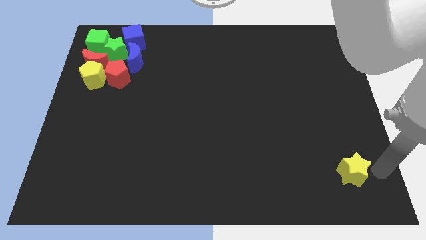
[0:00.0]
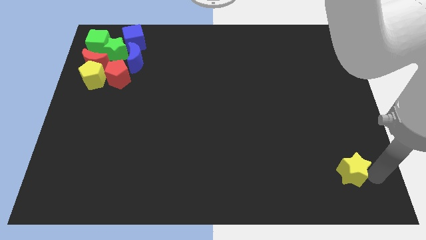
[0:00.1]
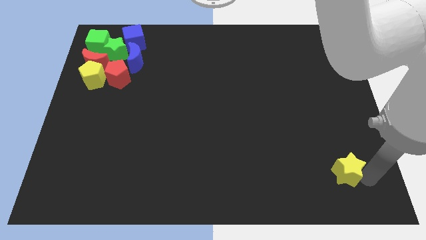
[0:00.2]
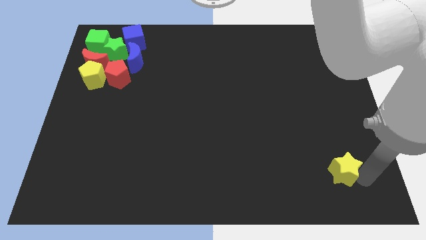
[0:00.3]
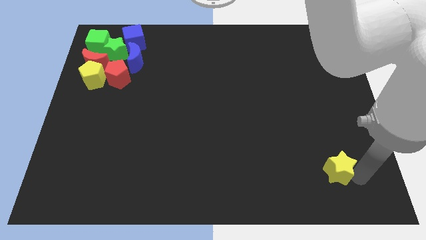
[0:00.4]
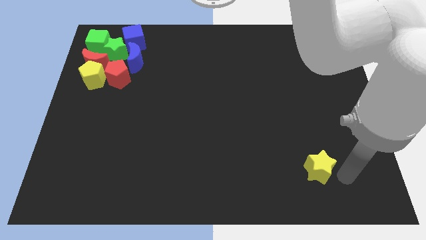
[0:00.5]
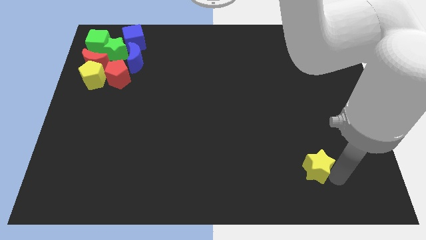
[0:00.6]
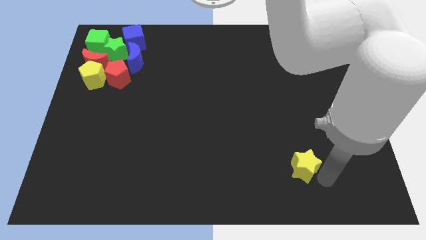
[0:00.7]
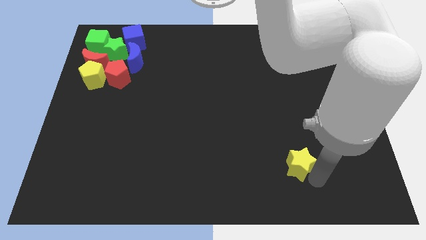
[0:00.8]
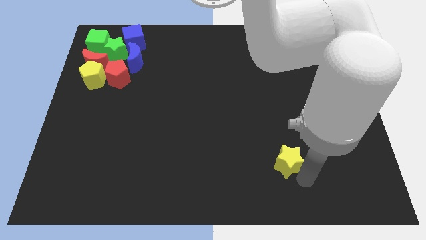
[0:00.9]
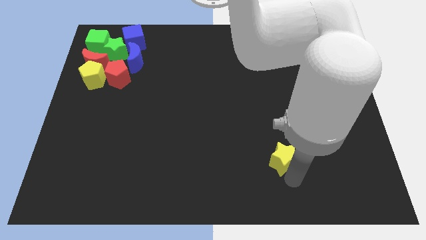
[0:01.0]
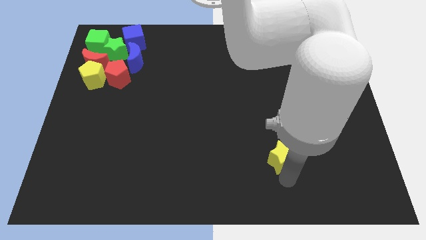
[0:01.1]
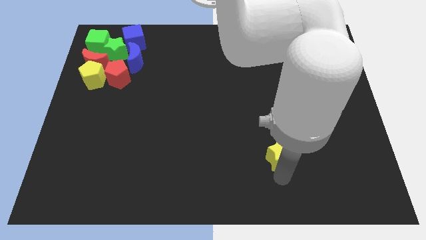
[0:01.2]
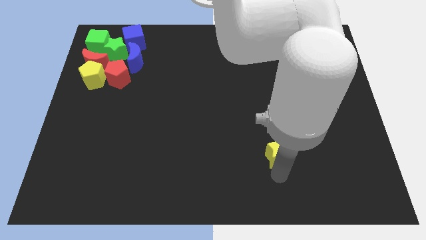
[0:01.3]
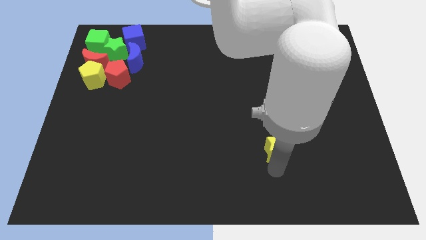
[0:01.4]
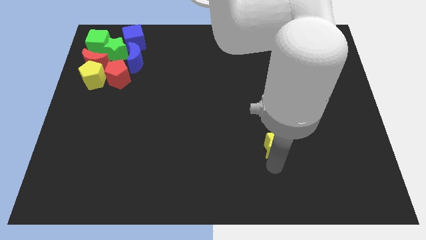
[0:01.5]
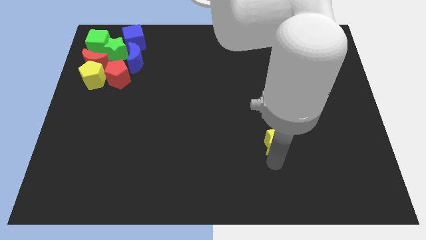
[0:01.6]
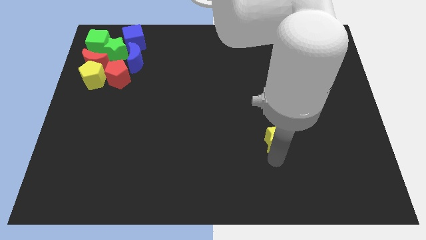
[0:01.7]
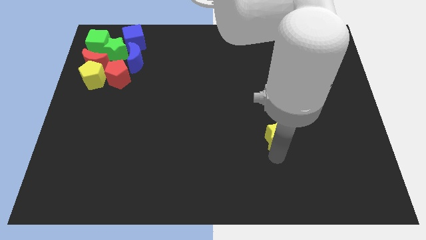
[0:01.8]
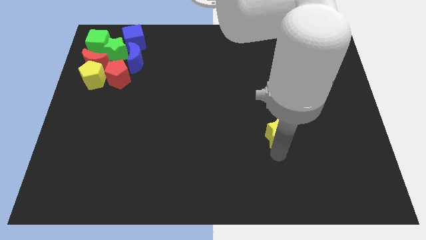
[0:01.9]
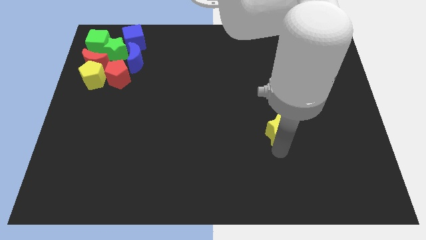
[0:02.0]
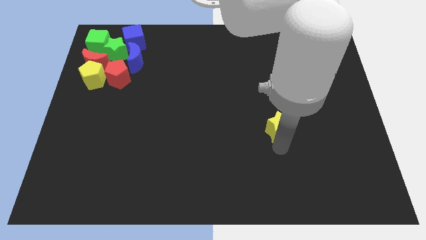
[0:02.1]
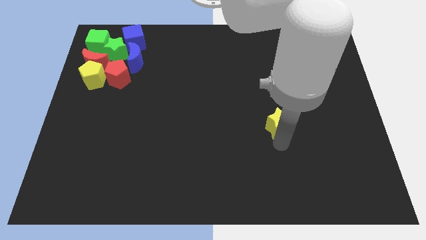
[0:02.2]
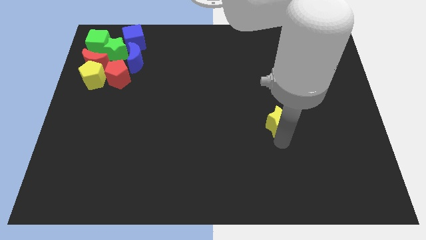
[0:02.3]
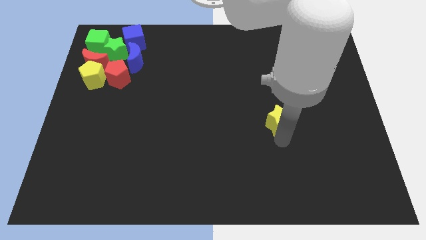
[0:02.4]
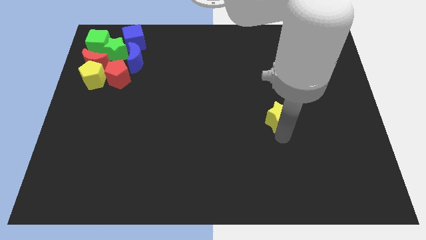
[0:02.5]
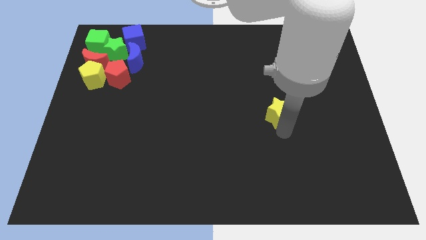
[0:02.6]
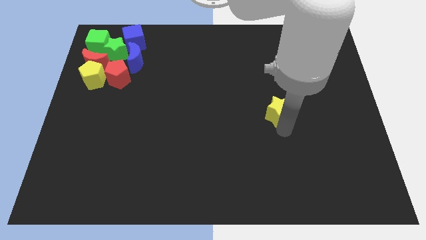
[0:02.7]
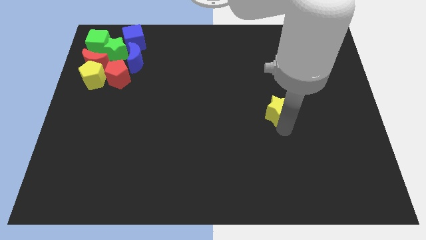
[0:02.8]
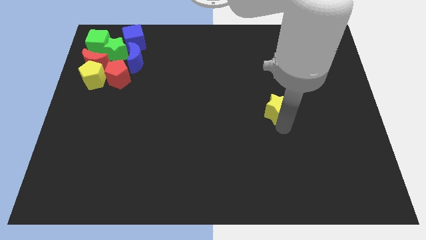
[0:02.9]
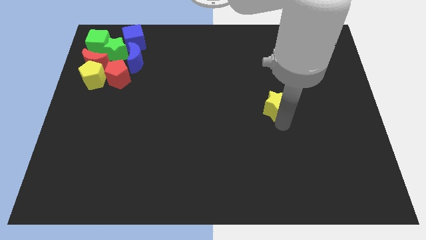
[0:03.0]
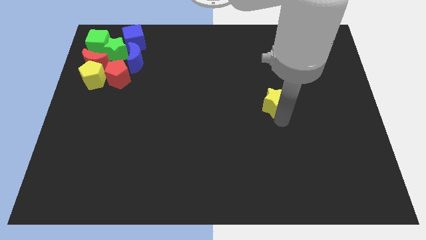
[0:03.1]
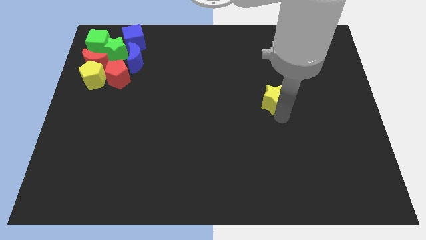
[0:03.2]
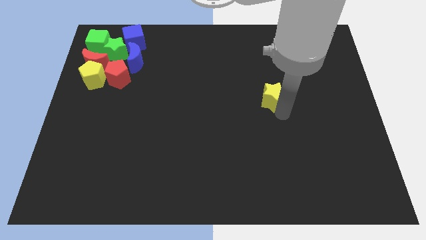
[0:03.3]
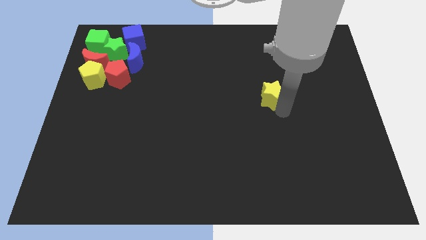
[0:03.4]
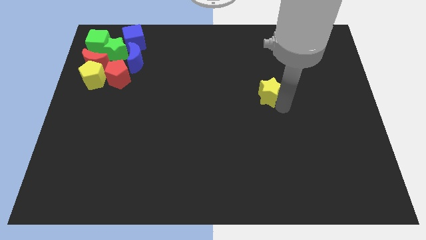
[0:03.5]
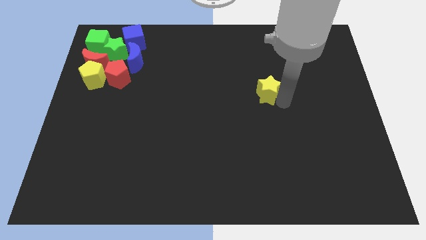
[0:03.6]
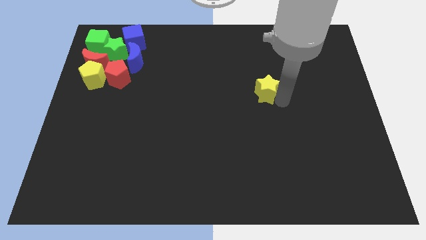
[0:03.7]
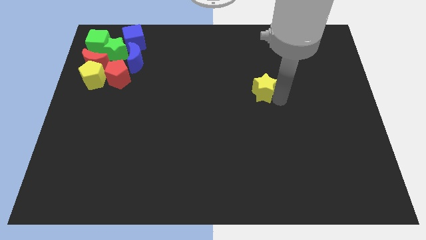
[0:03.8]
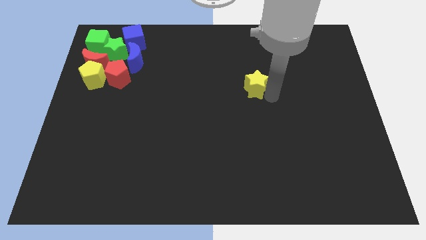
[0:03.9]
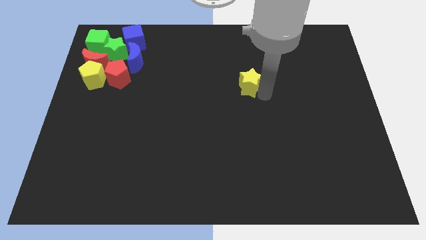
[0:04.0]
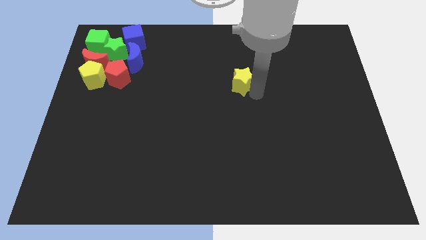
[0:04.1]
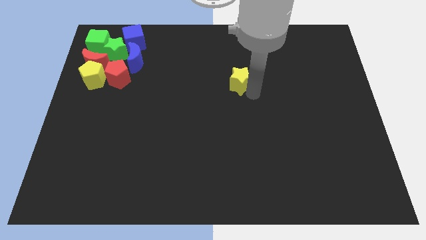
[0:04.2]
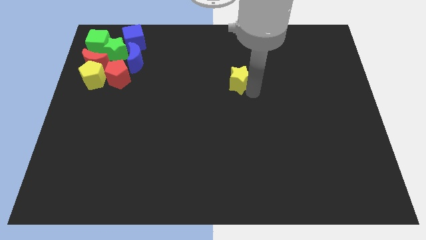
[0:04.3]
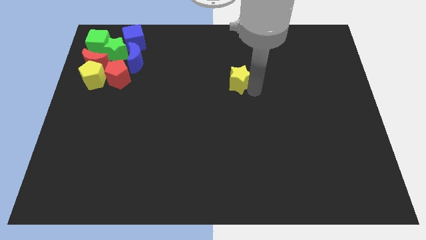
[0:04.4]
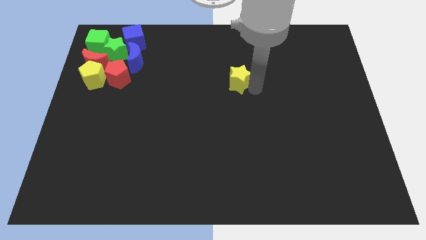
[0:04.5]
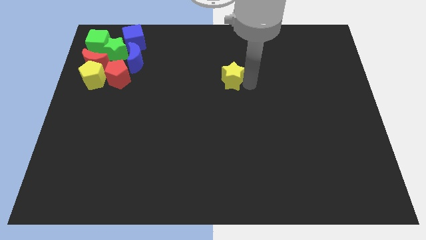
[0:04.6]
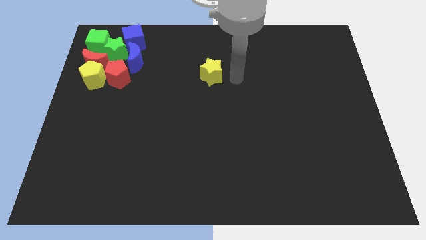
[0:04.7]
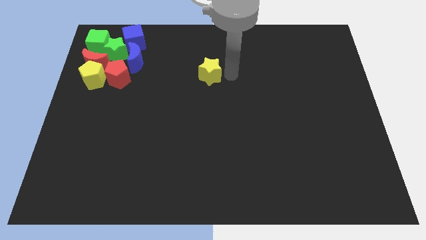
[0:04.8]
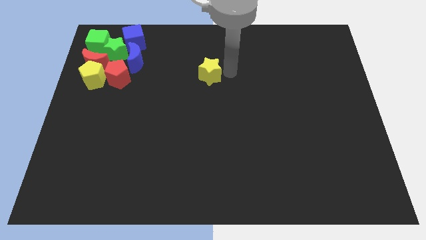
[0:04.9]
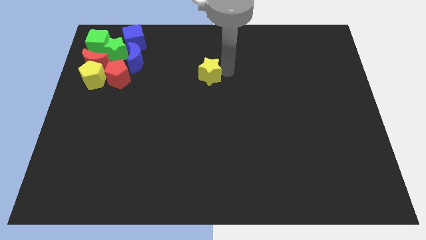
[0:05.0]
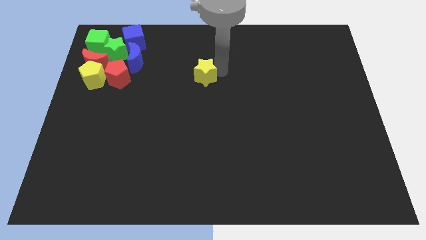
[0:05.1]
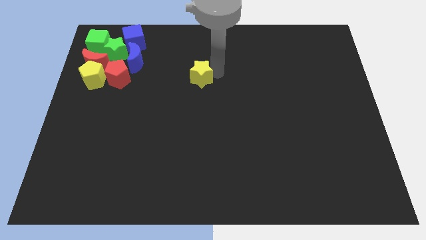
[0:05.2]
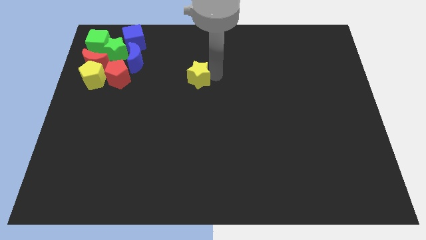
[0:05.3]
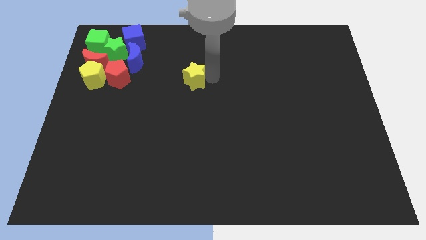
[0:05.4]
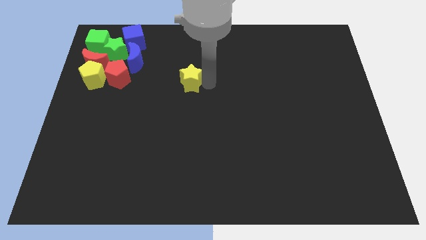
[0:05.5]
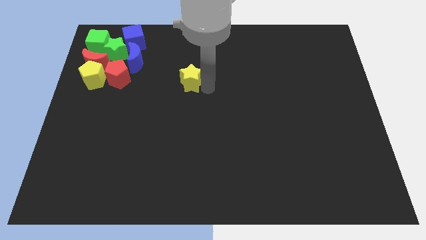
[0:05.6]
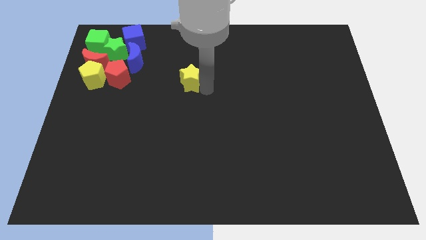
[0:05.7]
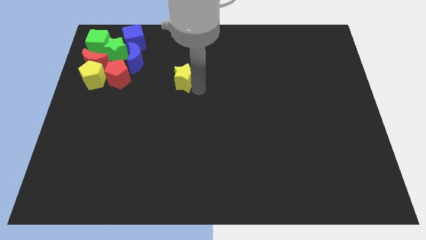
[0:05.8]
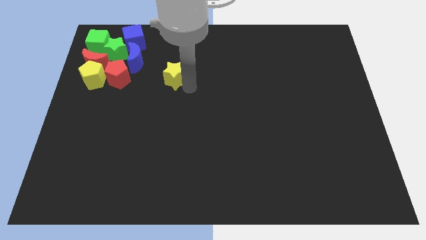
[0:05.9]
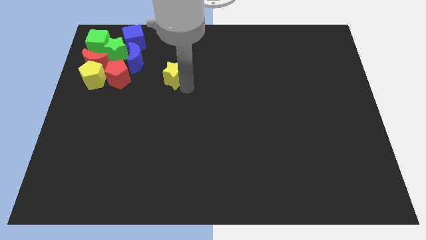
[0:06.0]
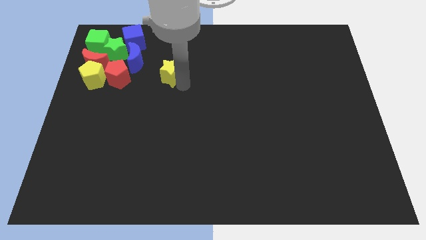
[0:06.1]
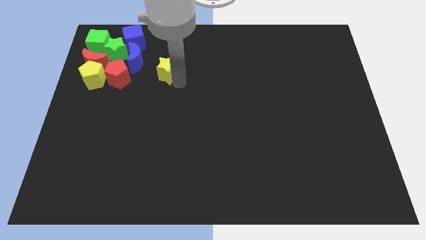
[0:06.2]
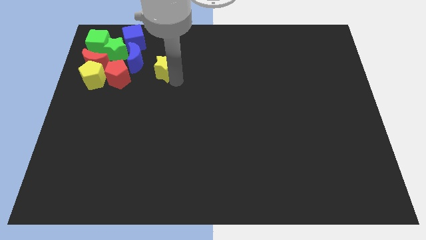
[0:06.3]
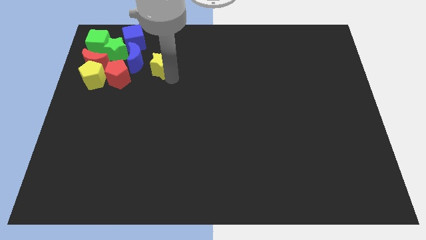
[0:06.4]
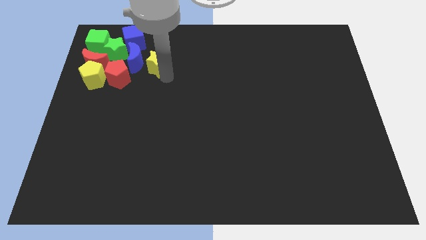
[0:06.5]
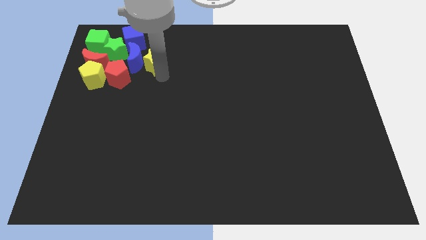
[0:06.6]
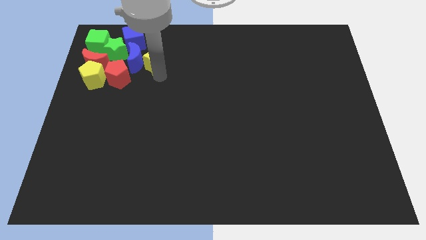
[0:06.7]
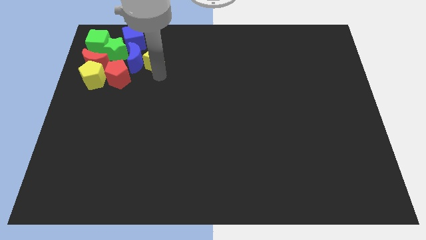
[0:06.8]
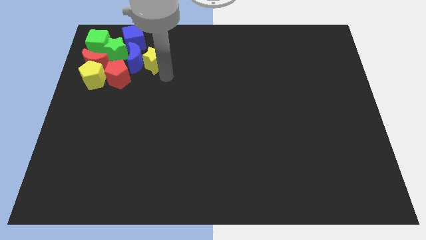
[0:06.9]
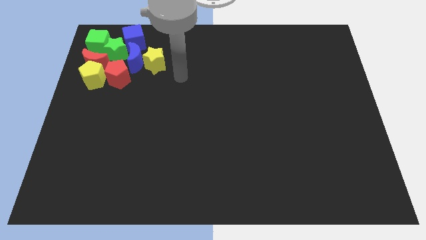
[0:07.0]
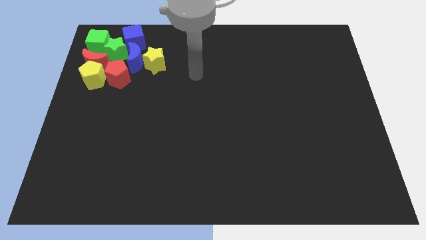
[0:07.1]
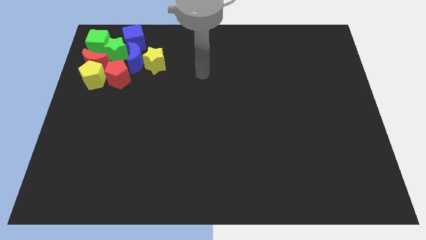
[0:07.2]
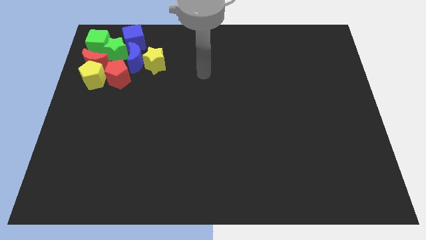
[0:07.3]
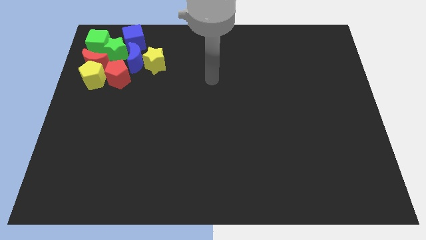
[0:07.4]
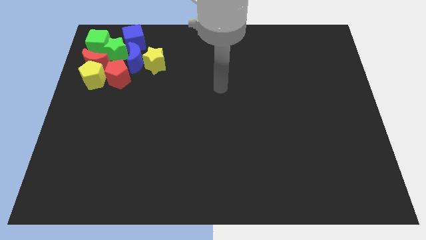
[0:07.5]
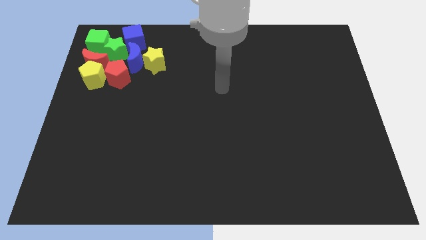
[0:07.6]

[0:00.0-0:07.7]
push the yellow star to the right side of the blue moon

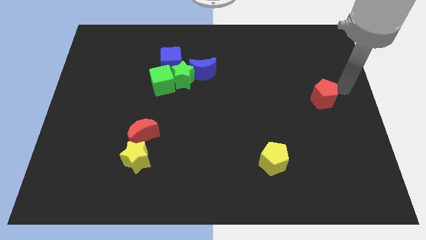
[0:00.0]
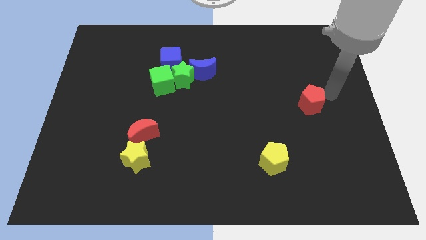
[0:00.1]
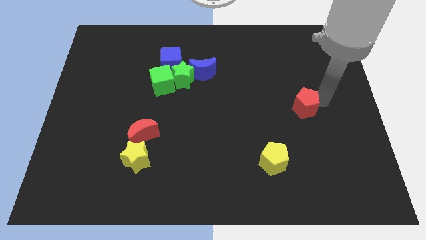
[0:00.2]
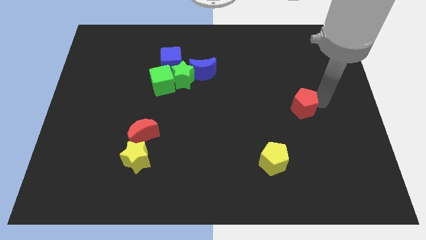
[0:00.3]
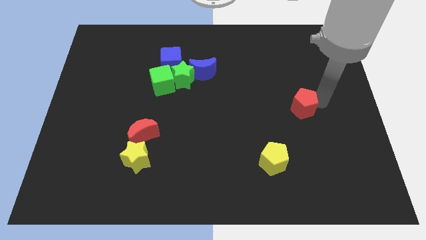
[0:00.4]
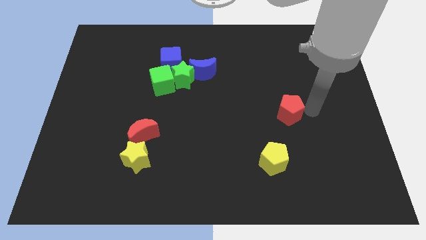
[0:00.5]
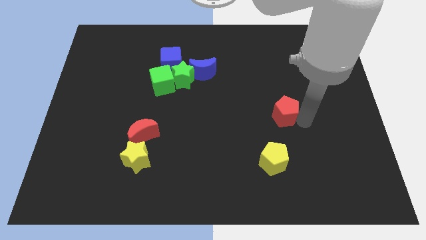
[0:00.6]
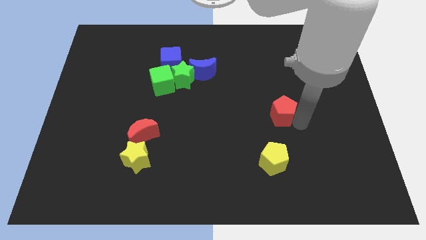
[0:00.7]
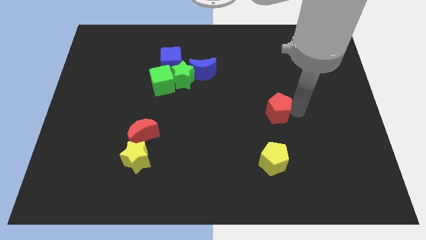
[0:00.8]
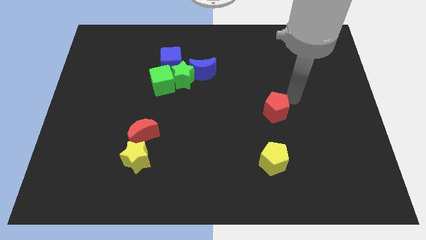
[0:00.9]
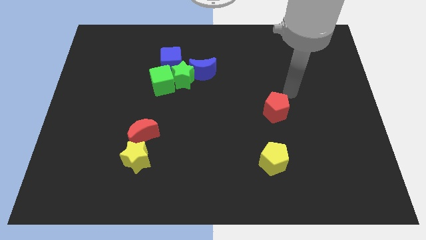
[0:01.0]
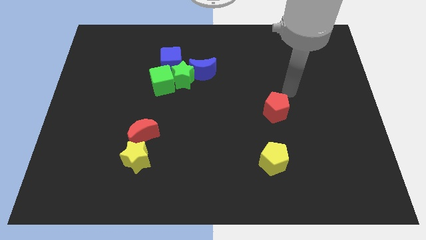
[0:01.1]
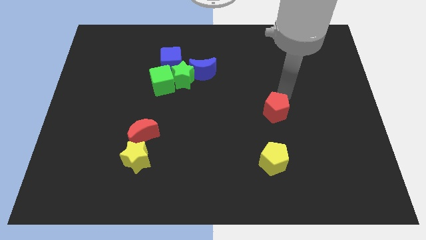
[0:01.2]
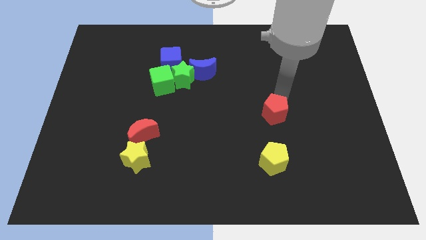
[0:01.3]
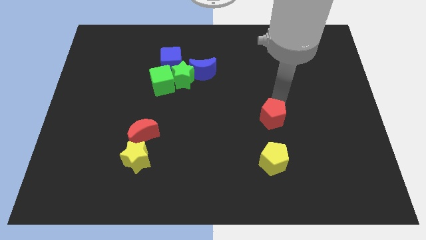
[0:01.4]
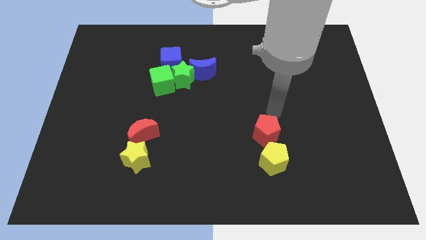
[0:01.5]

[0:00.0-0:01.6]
place the red pentagon vertically on the top of the yellow pentagon
